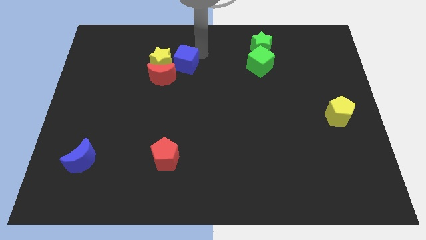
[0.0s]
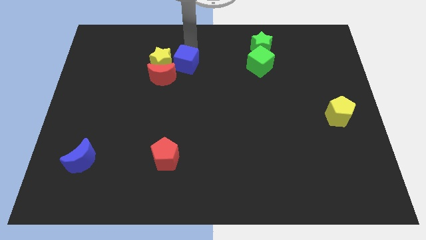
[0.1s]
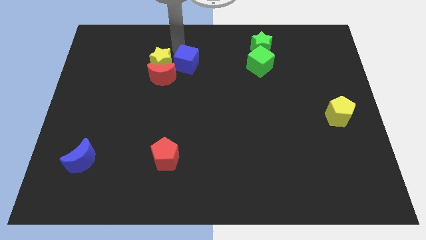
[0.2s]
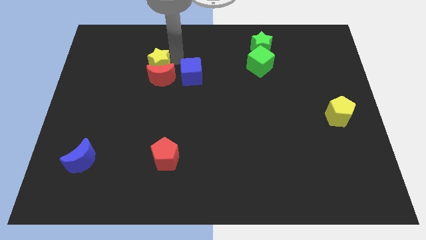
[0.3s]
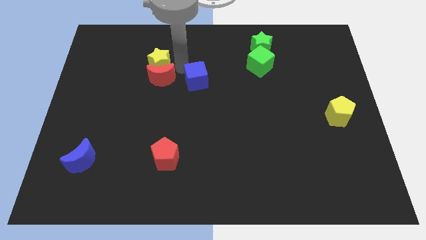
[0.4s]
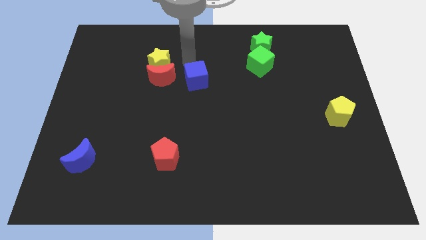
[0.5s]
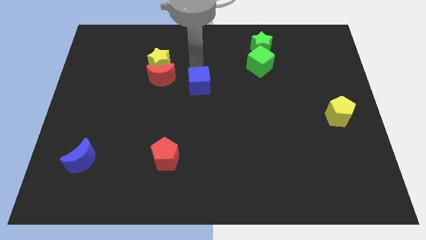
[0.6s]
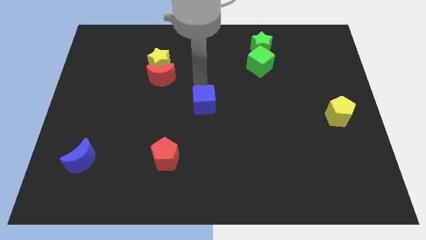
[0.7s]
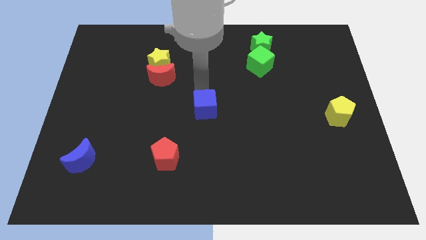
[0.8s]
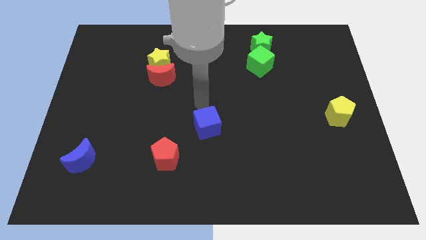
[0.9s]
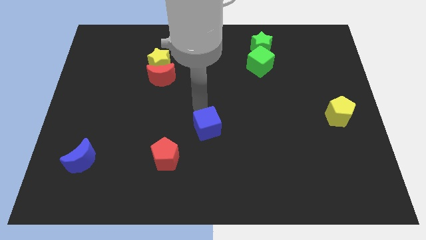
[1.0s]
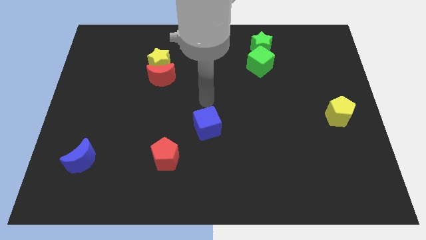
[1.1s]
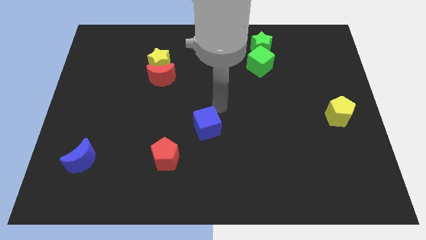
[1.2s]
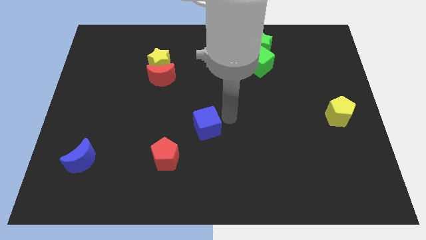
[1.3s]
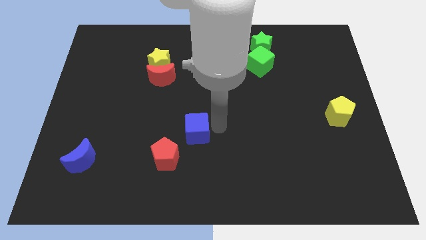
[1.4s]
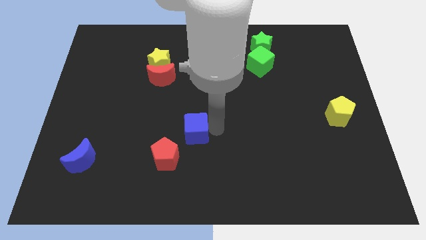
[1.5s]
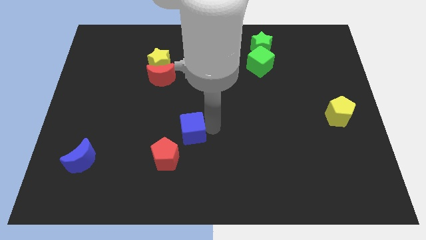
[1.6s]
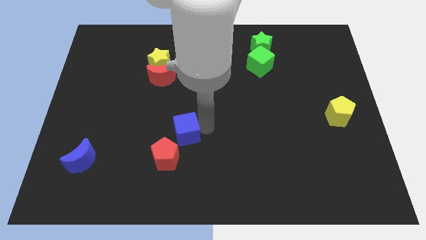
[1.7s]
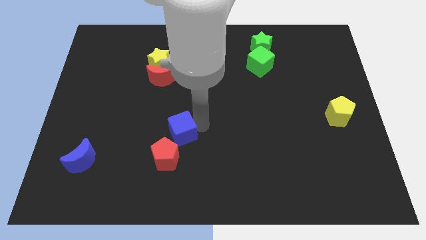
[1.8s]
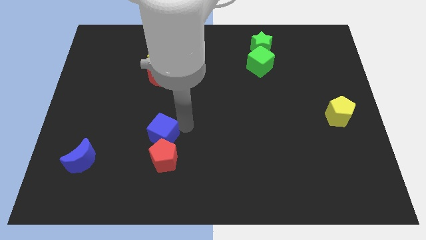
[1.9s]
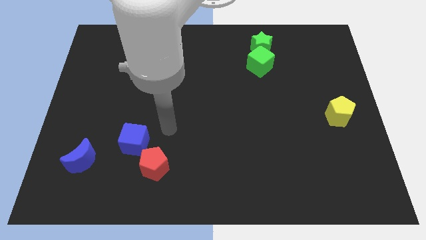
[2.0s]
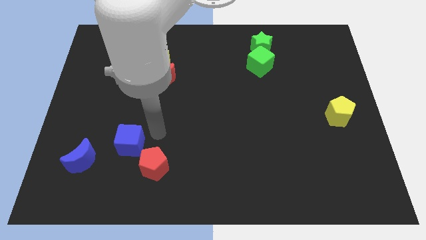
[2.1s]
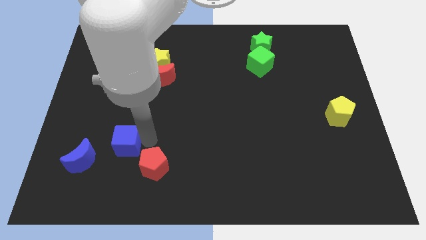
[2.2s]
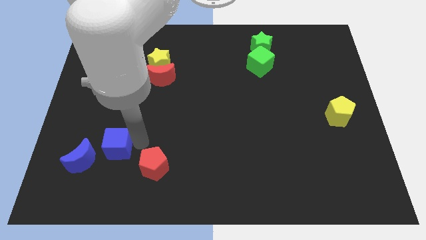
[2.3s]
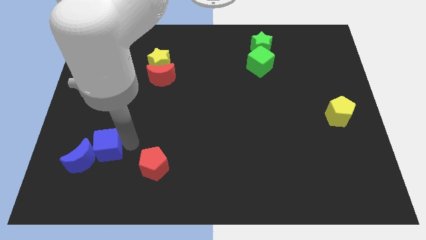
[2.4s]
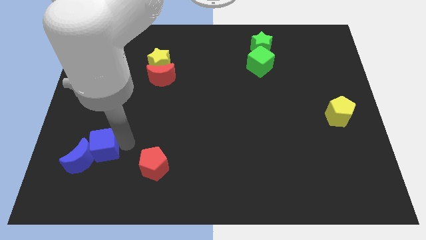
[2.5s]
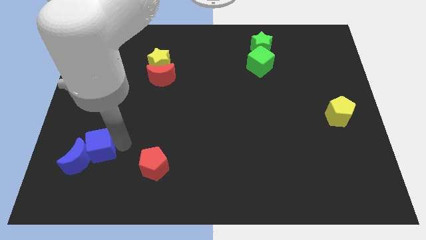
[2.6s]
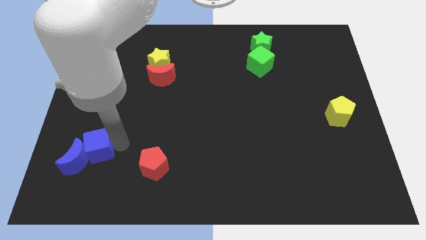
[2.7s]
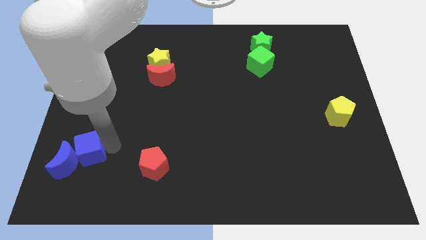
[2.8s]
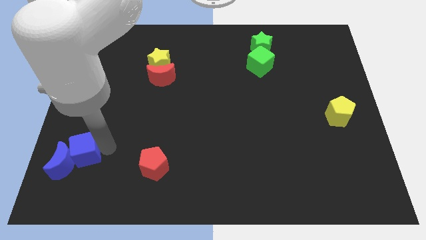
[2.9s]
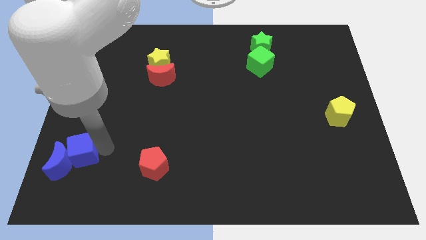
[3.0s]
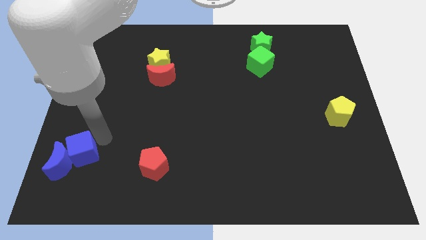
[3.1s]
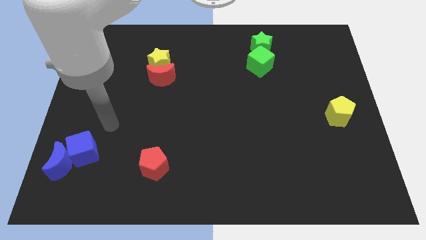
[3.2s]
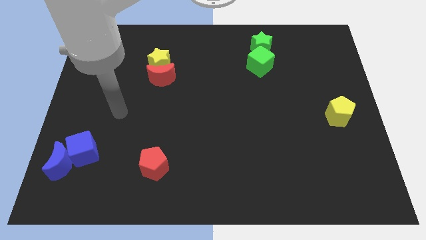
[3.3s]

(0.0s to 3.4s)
place the blue cube in between the red moon and blue moon

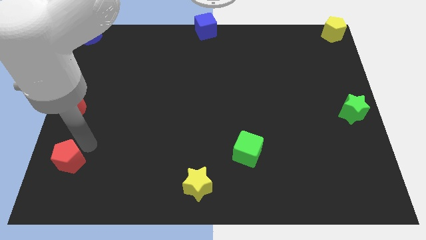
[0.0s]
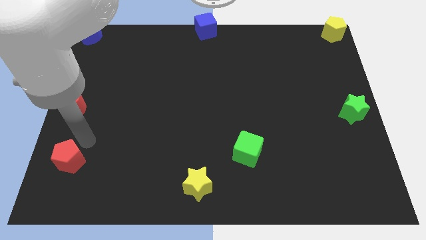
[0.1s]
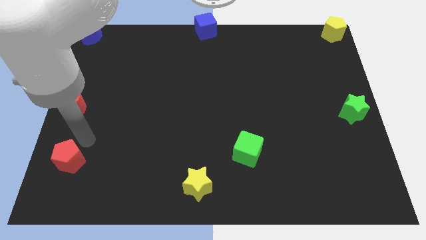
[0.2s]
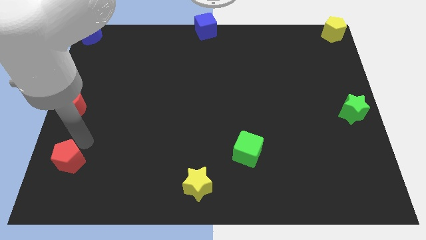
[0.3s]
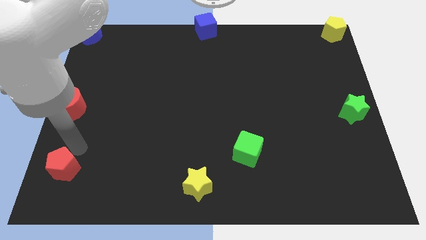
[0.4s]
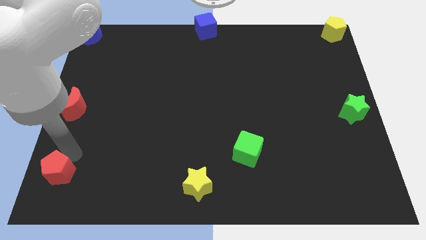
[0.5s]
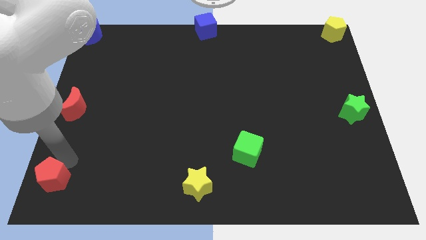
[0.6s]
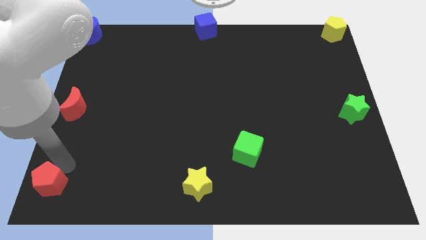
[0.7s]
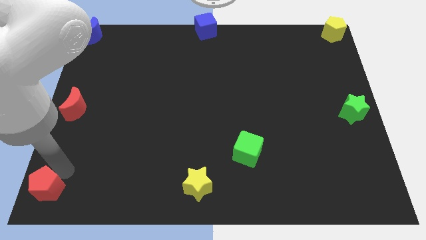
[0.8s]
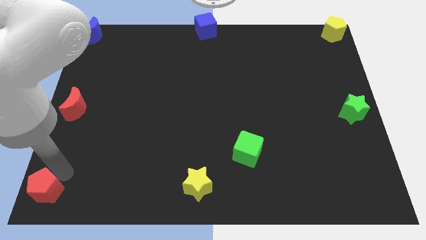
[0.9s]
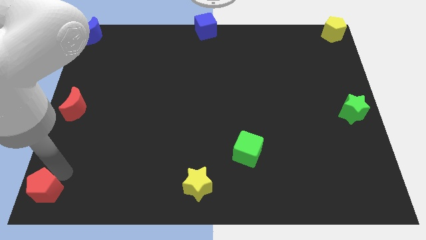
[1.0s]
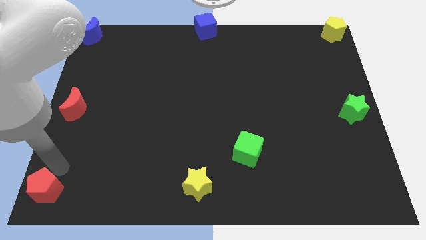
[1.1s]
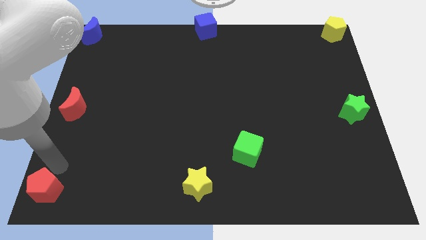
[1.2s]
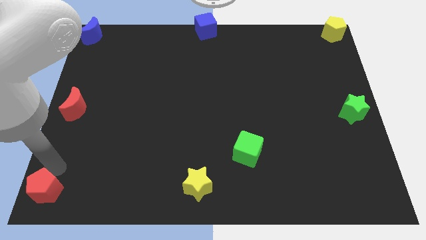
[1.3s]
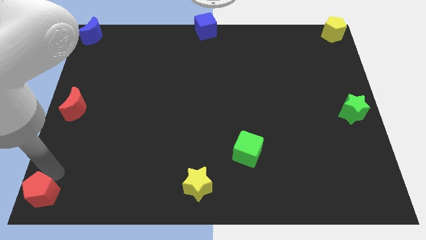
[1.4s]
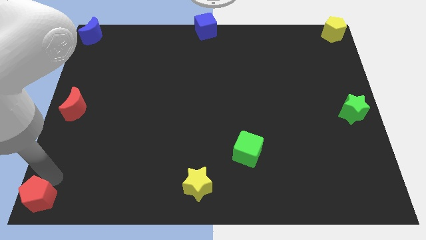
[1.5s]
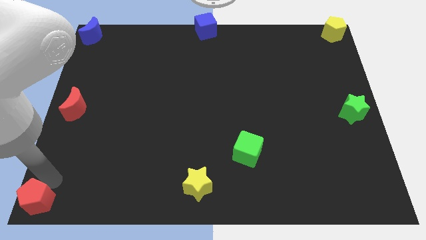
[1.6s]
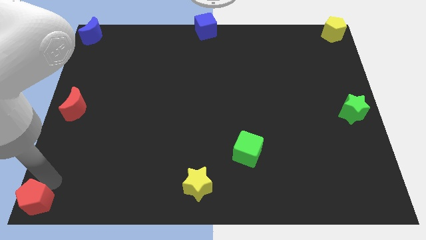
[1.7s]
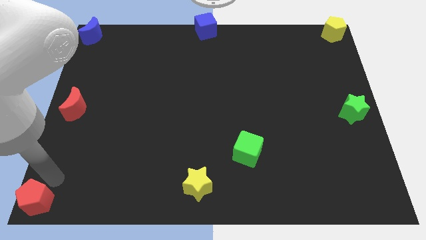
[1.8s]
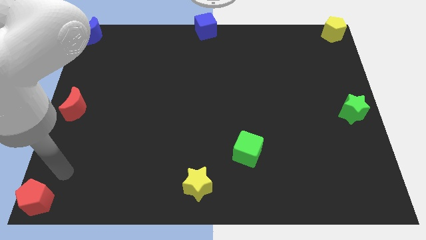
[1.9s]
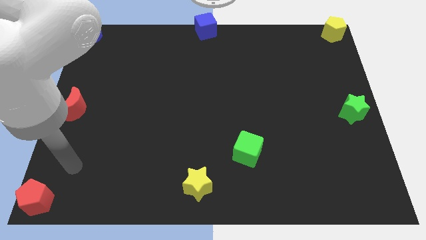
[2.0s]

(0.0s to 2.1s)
push the red pentagon to the left bottom corner

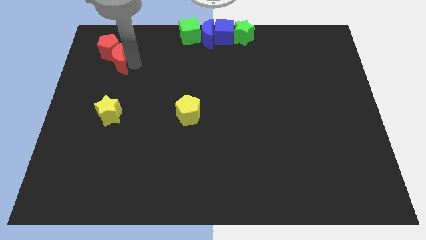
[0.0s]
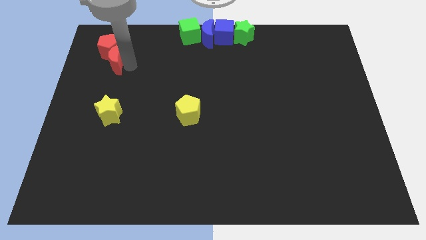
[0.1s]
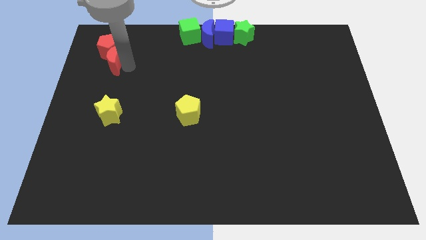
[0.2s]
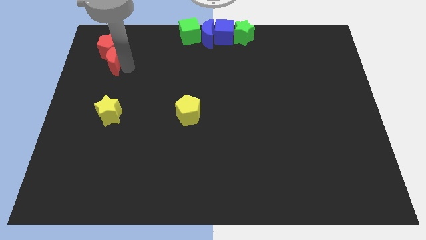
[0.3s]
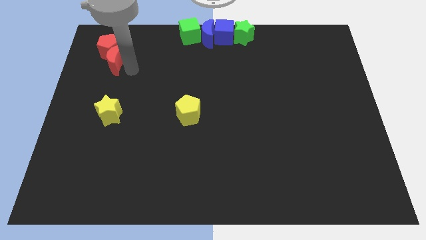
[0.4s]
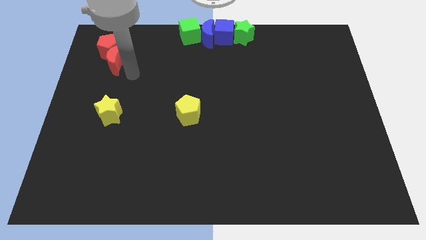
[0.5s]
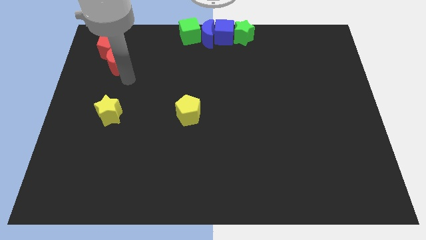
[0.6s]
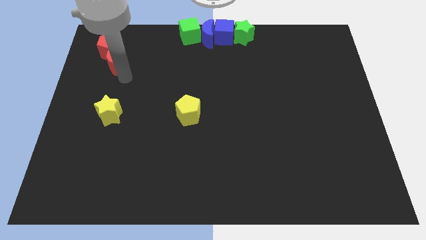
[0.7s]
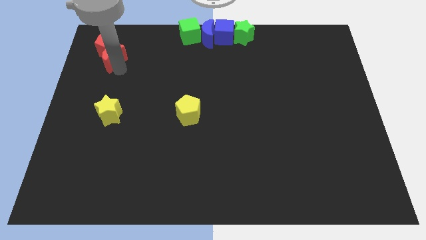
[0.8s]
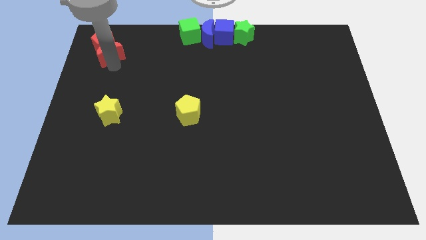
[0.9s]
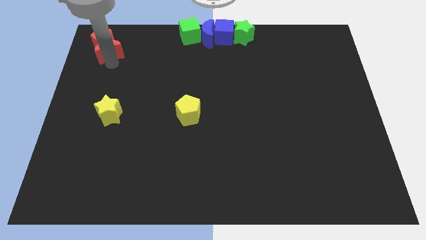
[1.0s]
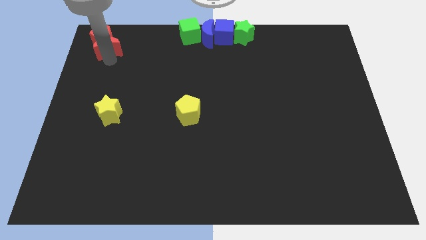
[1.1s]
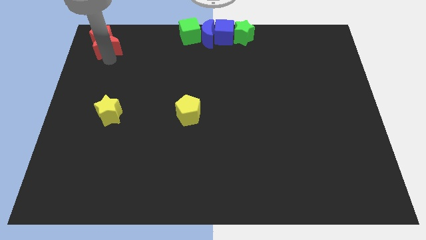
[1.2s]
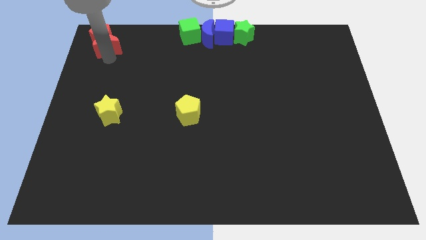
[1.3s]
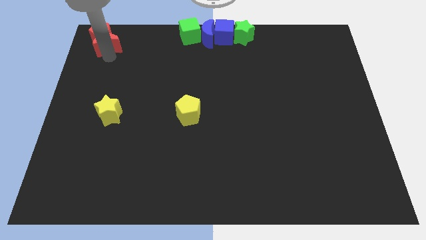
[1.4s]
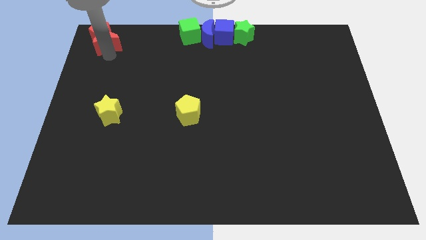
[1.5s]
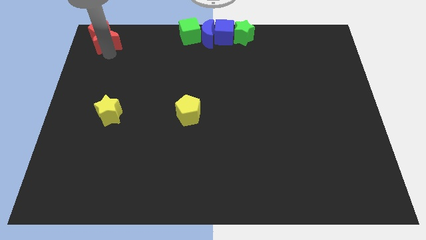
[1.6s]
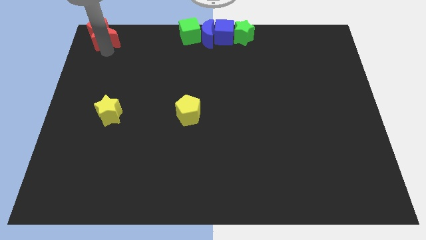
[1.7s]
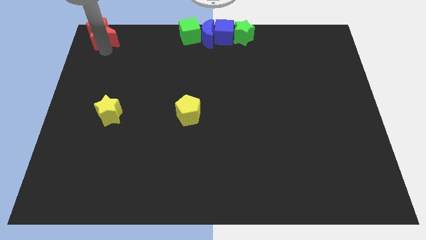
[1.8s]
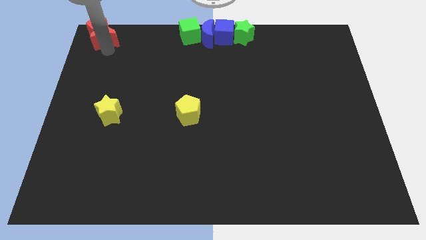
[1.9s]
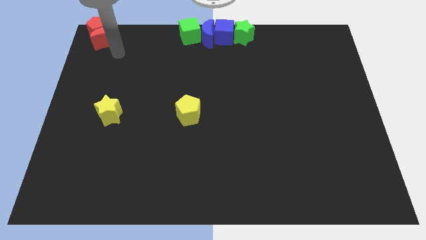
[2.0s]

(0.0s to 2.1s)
move the red blocks to the top left corner of the board

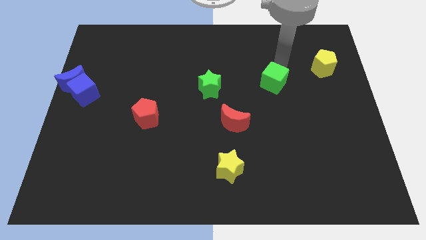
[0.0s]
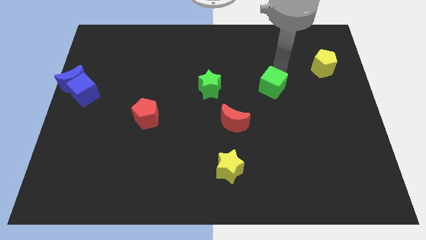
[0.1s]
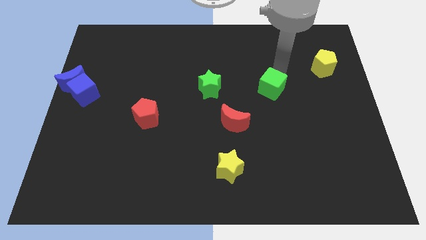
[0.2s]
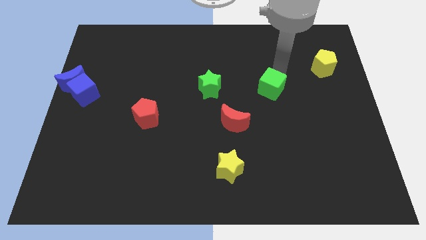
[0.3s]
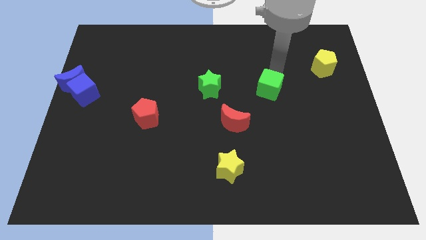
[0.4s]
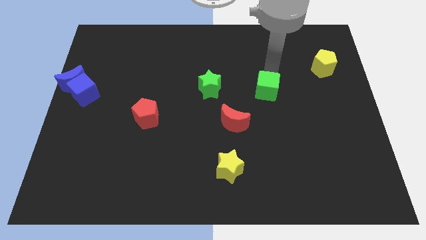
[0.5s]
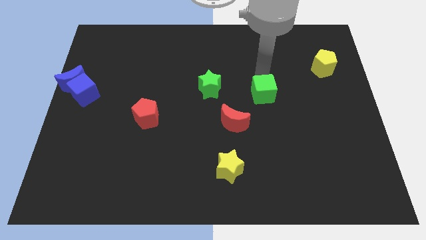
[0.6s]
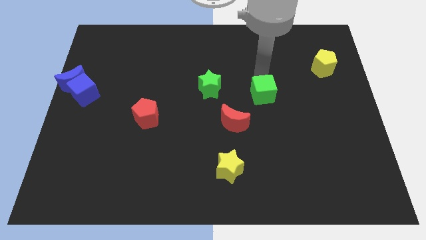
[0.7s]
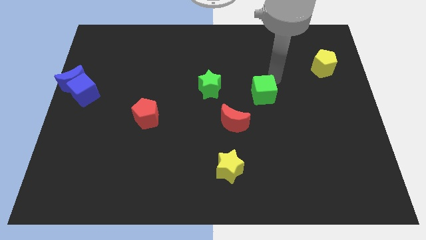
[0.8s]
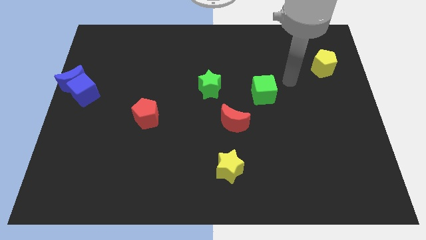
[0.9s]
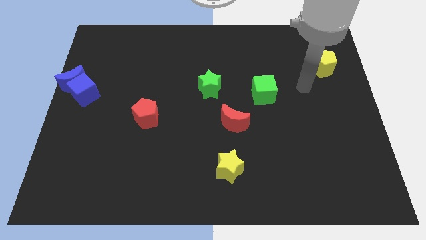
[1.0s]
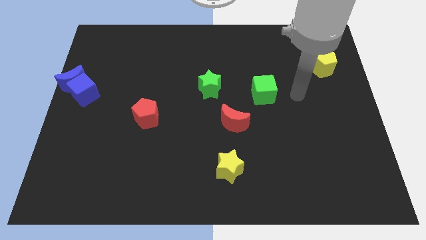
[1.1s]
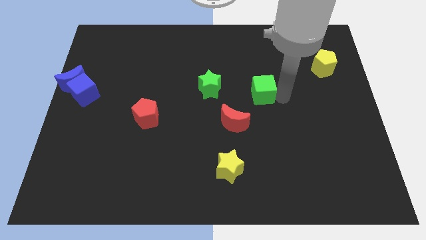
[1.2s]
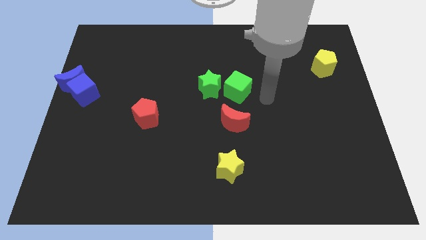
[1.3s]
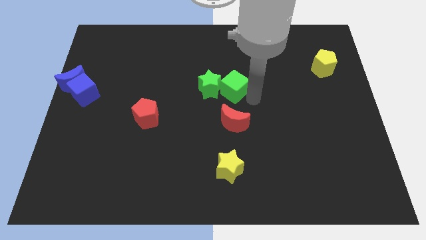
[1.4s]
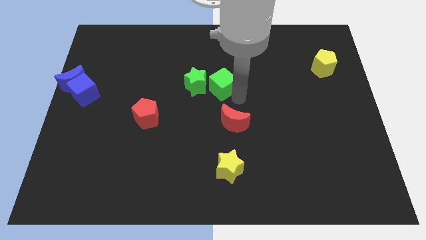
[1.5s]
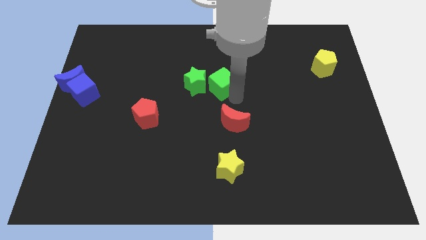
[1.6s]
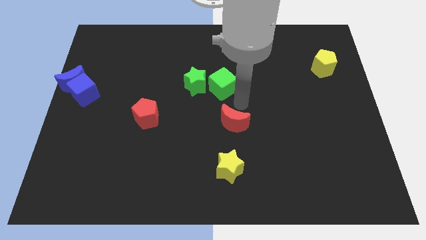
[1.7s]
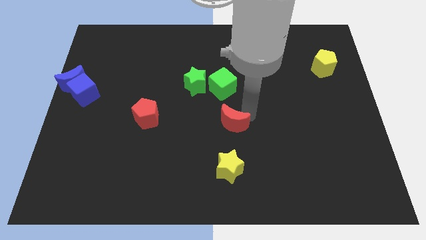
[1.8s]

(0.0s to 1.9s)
push green cube into the green star
